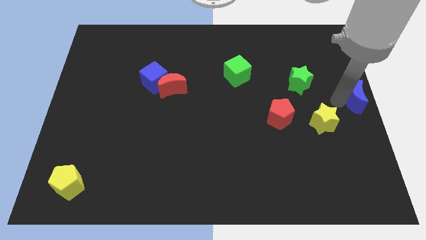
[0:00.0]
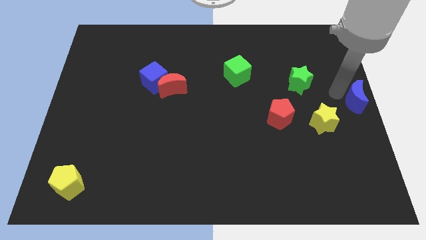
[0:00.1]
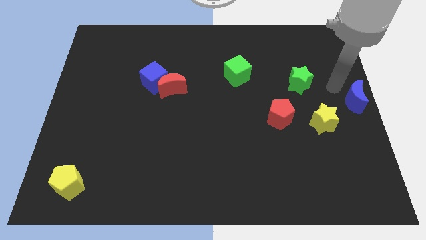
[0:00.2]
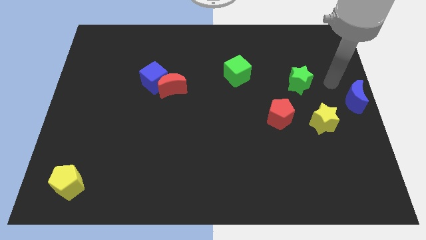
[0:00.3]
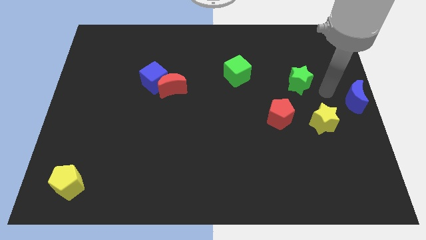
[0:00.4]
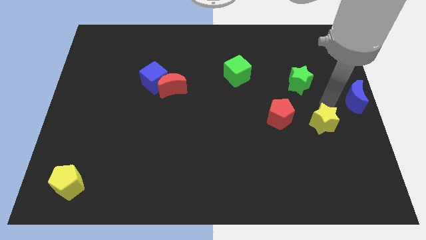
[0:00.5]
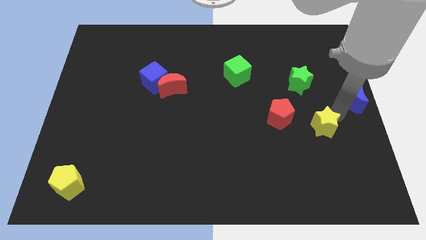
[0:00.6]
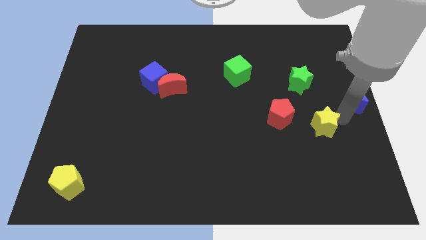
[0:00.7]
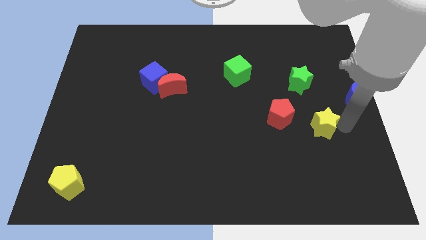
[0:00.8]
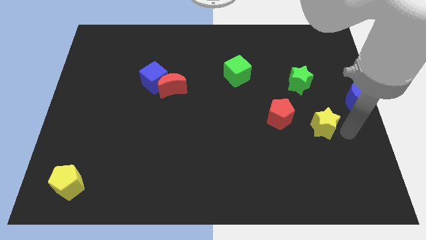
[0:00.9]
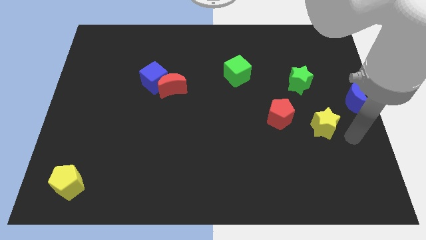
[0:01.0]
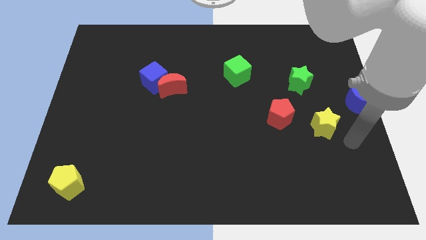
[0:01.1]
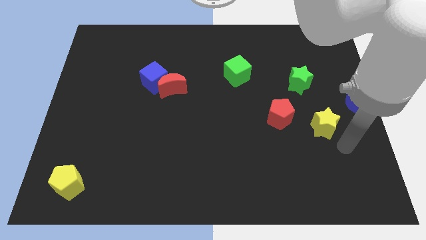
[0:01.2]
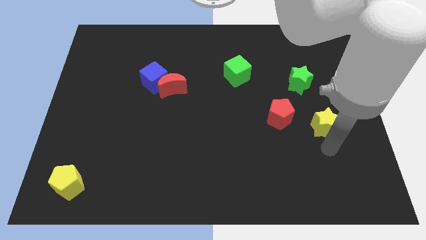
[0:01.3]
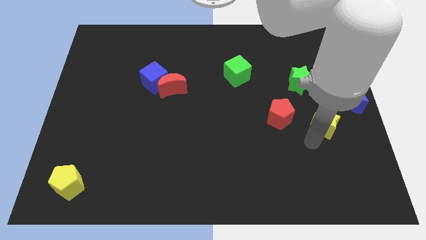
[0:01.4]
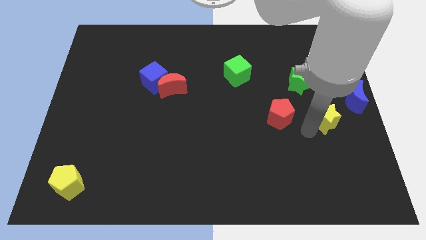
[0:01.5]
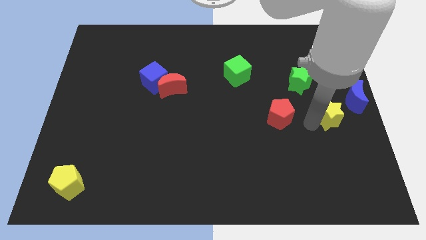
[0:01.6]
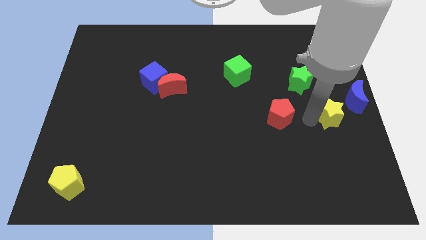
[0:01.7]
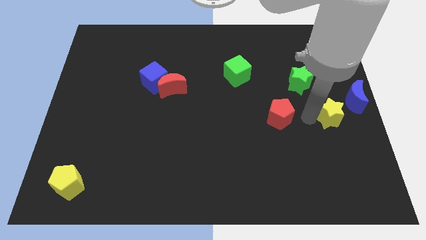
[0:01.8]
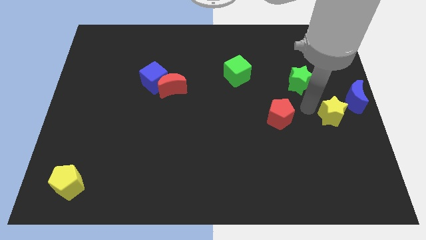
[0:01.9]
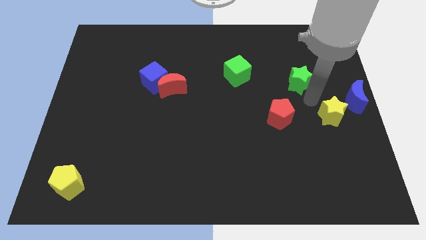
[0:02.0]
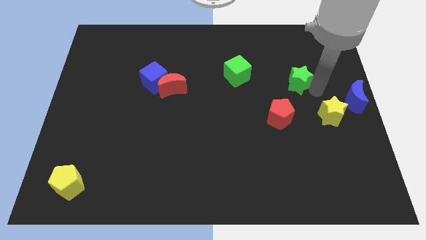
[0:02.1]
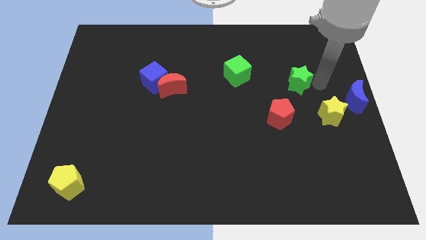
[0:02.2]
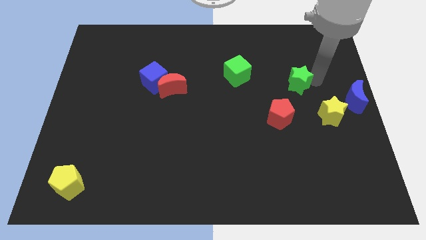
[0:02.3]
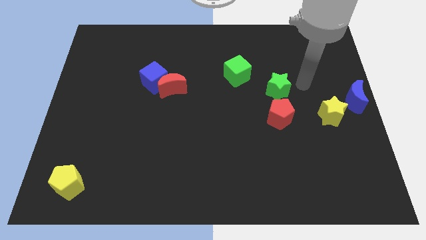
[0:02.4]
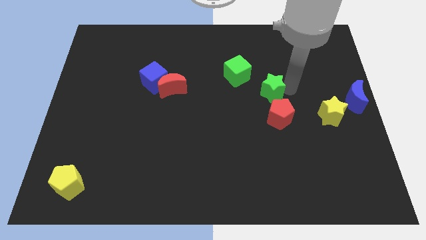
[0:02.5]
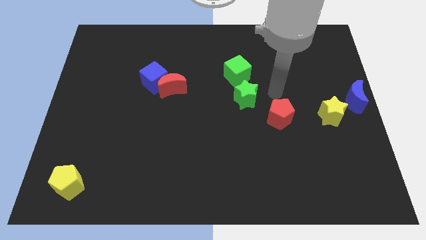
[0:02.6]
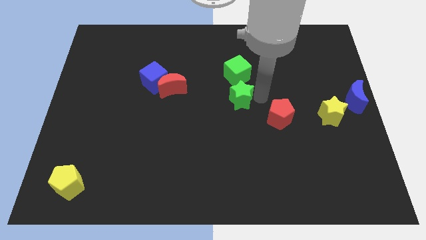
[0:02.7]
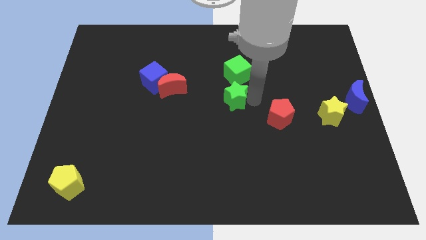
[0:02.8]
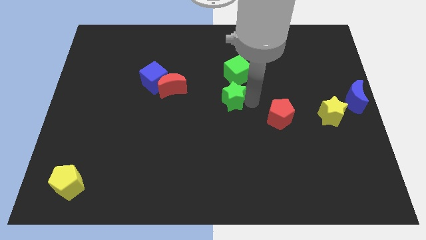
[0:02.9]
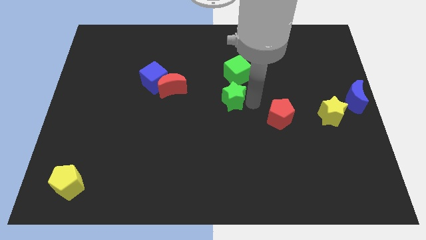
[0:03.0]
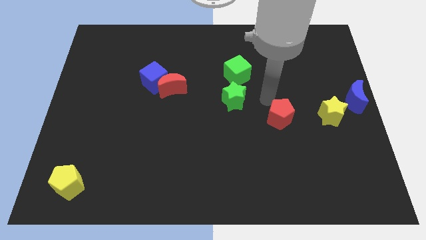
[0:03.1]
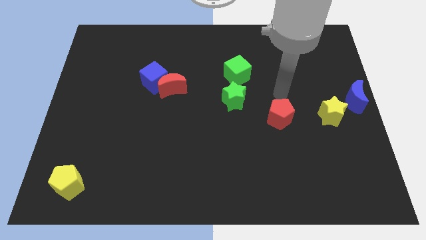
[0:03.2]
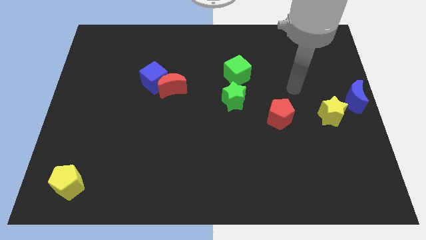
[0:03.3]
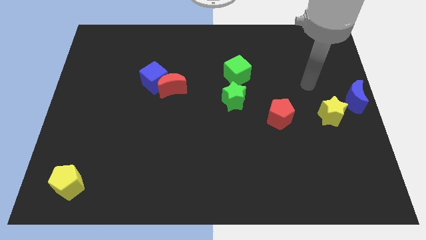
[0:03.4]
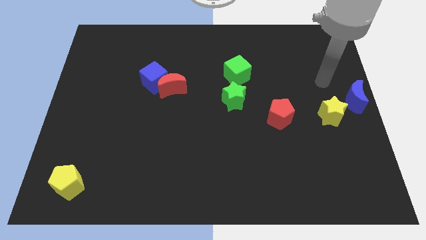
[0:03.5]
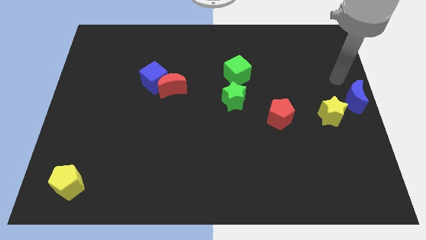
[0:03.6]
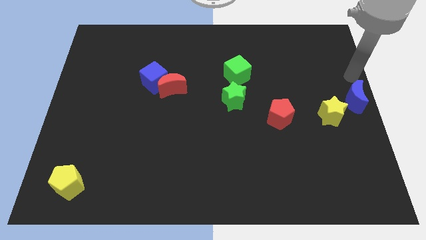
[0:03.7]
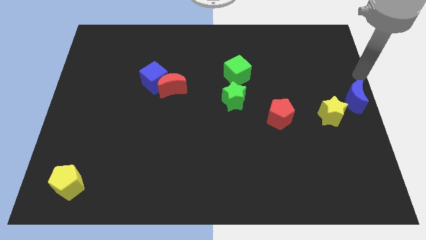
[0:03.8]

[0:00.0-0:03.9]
place green star to the bottom of green cube

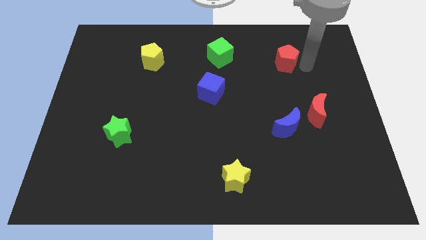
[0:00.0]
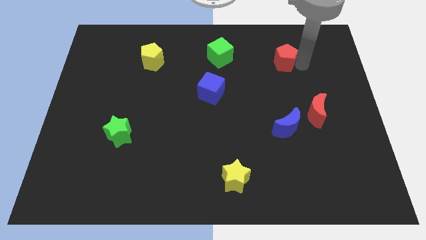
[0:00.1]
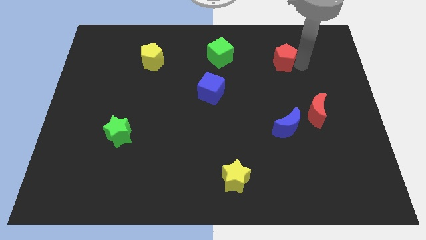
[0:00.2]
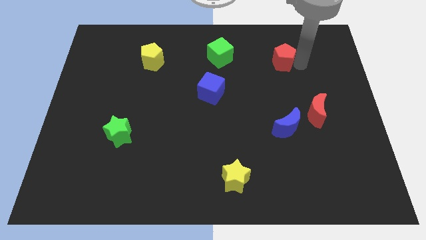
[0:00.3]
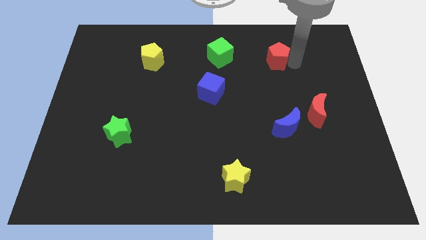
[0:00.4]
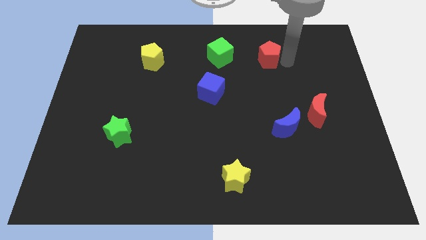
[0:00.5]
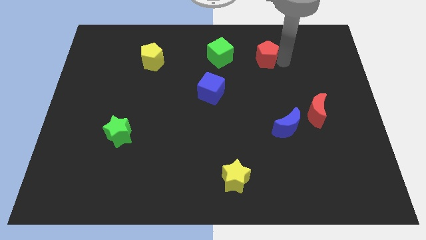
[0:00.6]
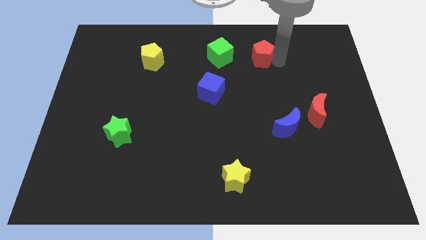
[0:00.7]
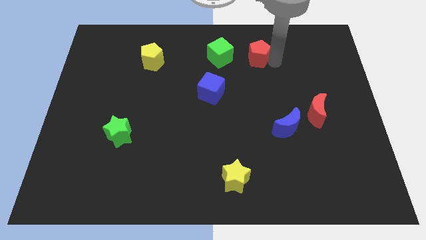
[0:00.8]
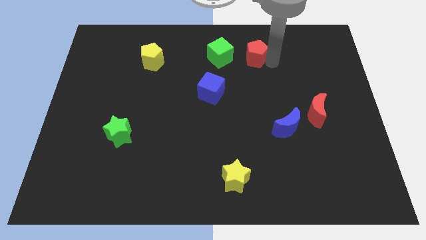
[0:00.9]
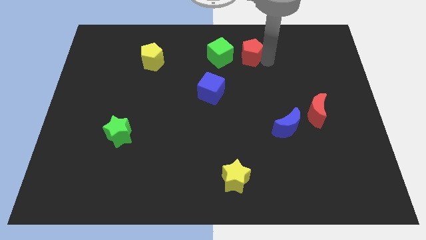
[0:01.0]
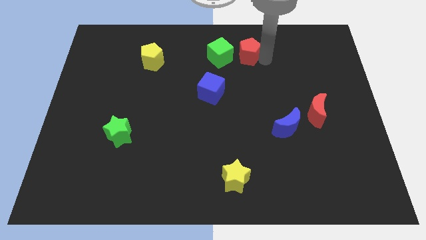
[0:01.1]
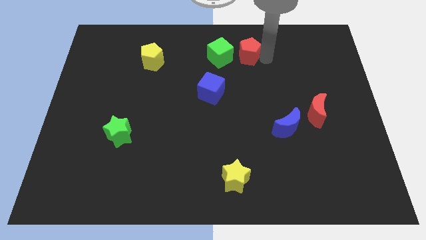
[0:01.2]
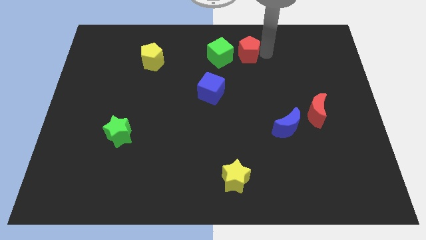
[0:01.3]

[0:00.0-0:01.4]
place red pentagon to the right of green cube

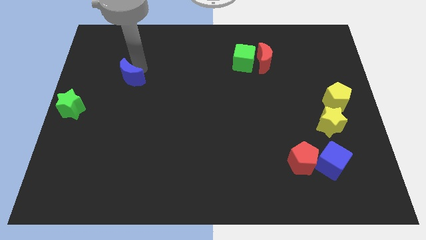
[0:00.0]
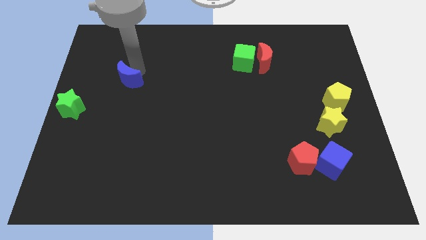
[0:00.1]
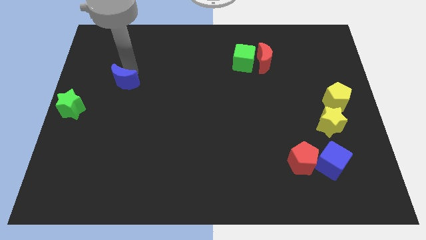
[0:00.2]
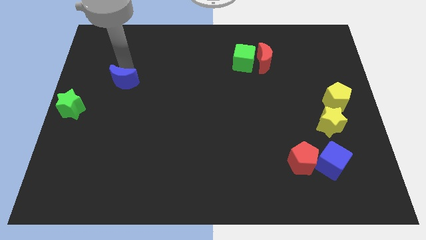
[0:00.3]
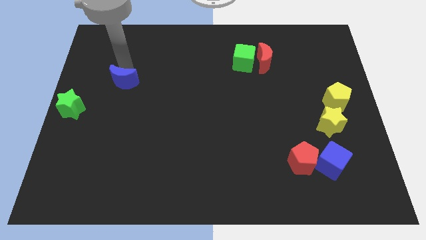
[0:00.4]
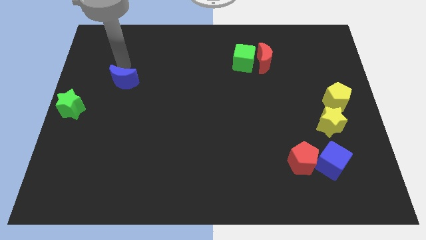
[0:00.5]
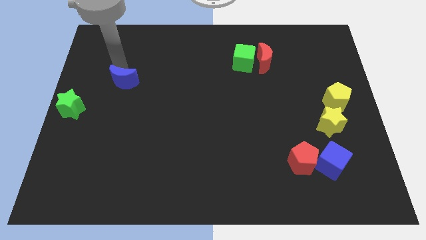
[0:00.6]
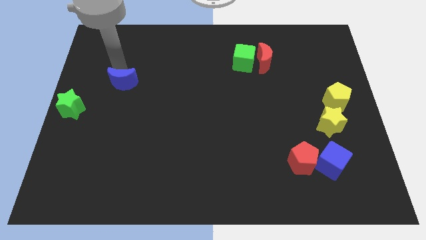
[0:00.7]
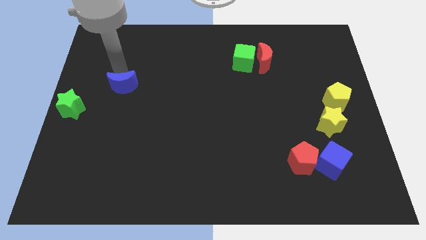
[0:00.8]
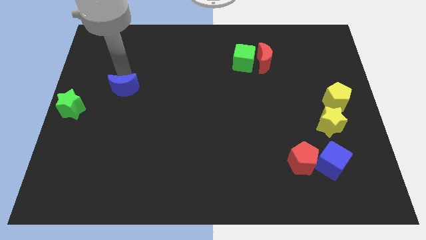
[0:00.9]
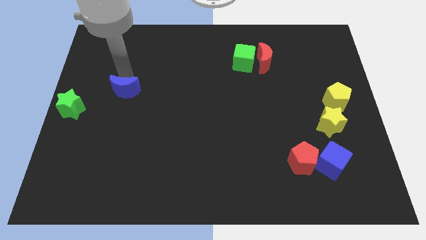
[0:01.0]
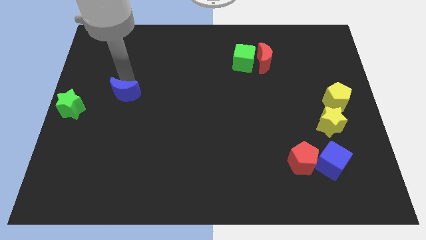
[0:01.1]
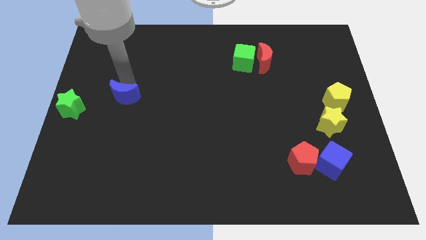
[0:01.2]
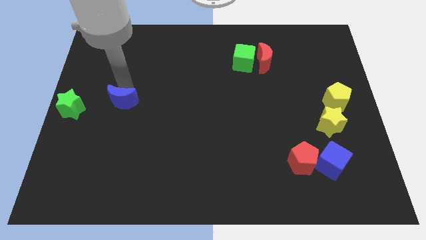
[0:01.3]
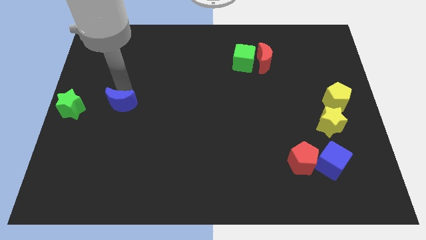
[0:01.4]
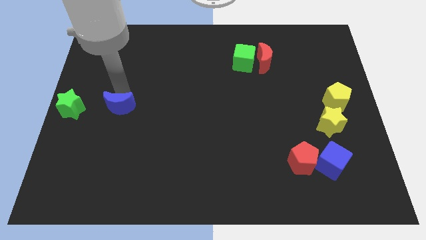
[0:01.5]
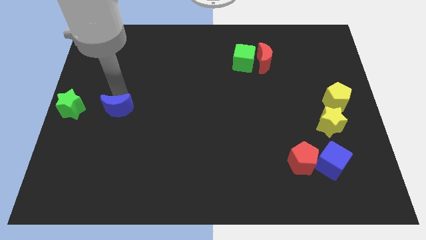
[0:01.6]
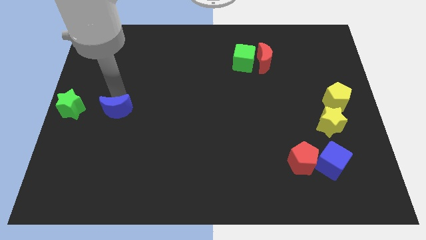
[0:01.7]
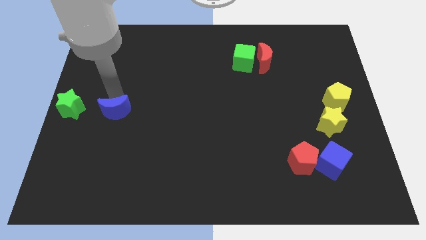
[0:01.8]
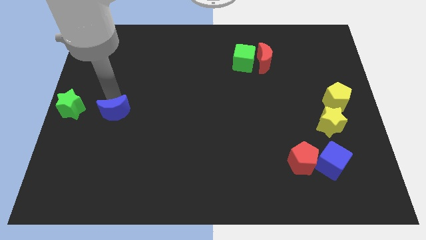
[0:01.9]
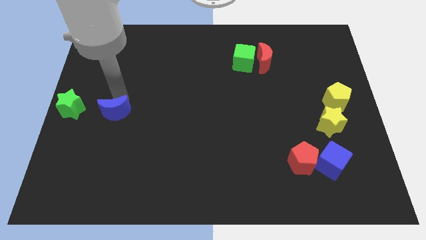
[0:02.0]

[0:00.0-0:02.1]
place the blue crescent to the right of the green star

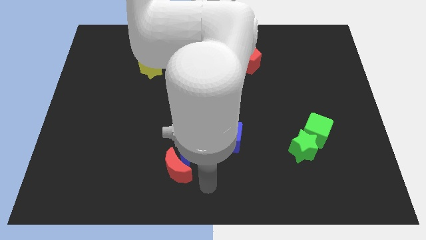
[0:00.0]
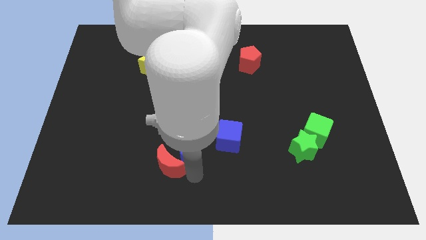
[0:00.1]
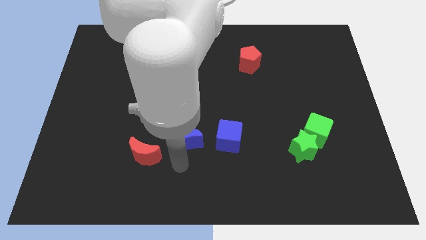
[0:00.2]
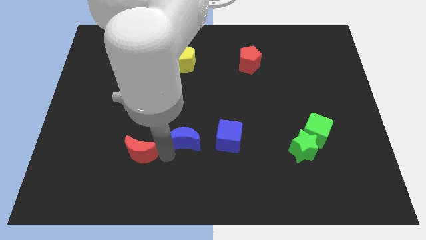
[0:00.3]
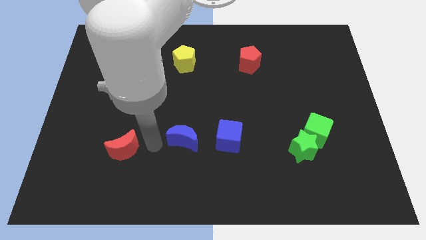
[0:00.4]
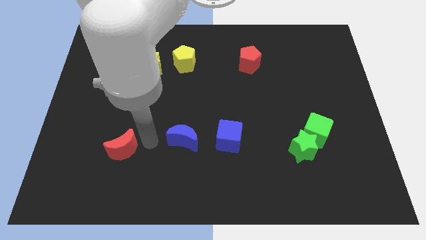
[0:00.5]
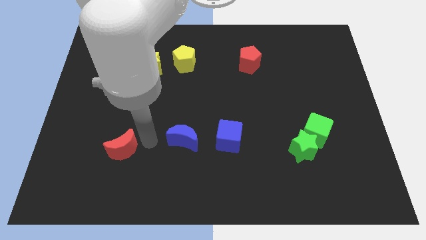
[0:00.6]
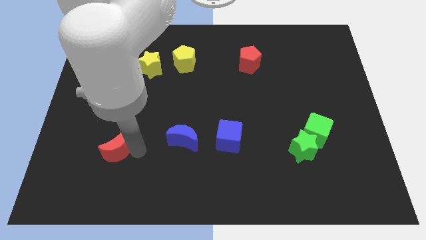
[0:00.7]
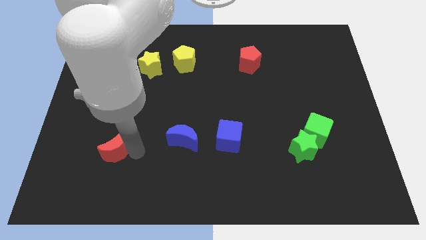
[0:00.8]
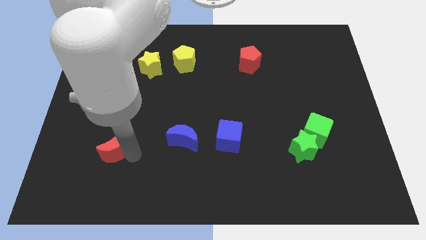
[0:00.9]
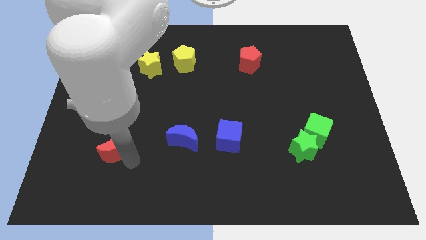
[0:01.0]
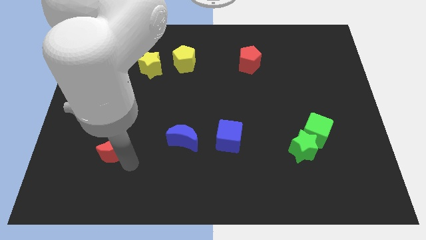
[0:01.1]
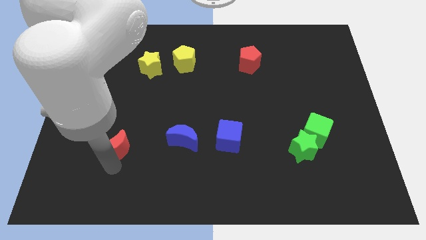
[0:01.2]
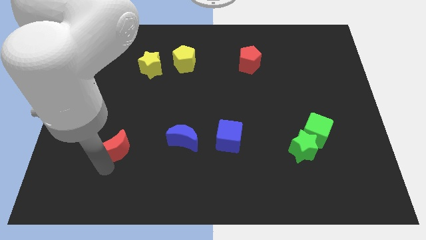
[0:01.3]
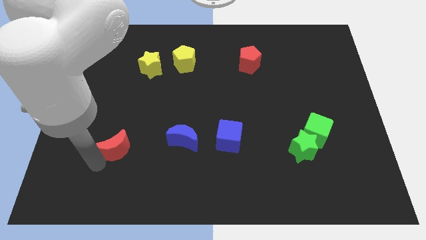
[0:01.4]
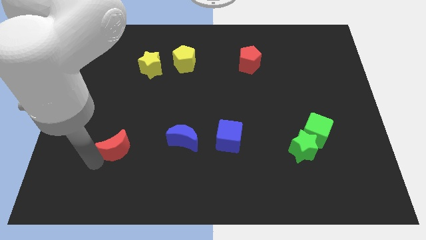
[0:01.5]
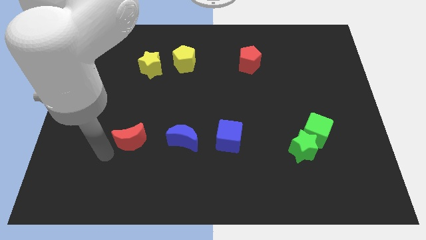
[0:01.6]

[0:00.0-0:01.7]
separate the red crescent from the blue crescent
